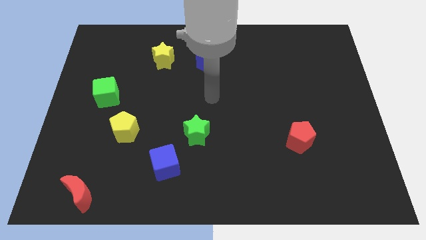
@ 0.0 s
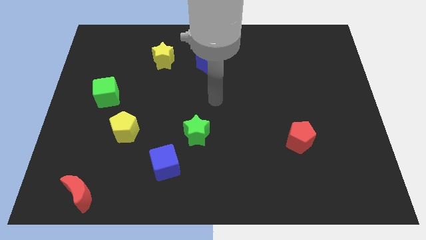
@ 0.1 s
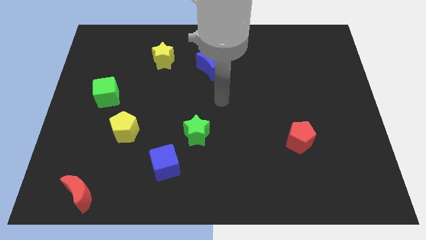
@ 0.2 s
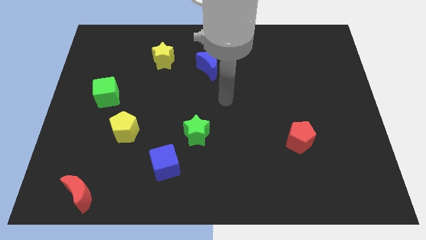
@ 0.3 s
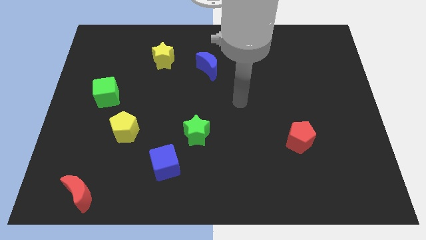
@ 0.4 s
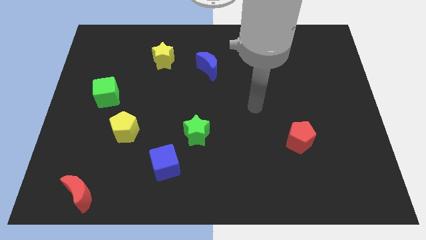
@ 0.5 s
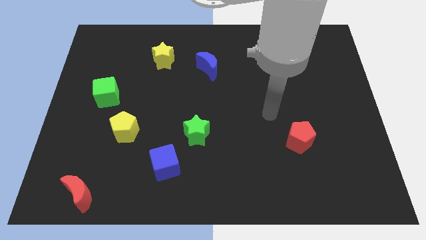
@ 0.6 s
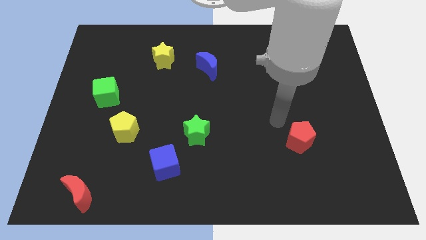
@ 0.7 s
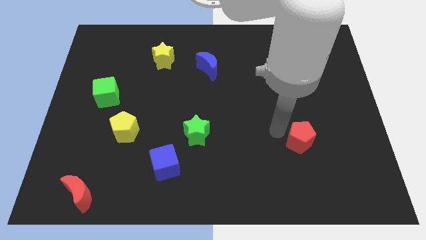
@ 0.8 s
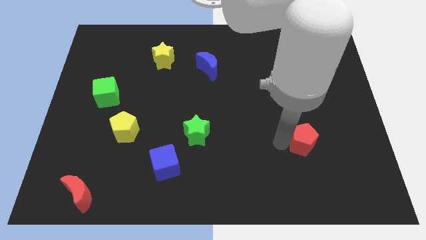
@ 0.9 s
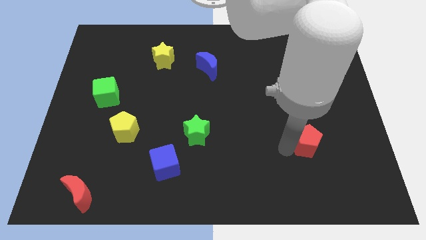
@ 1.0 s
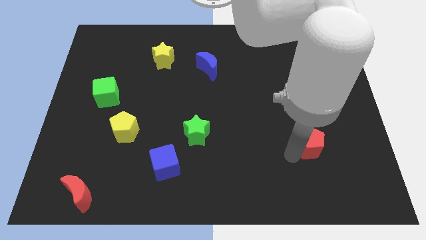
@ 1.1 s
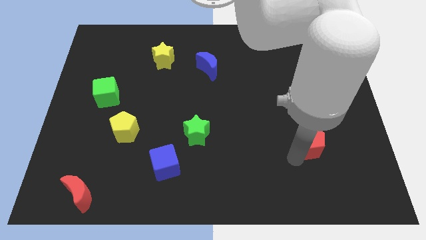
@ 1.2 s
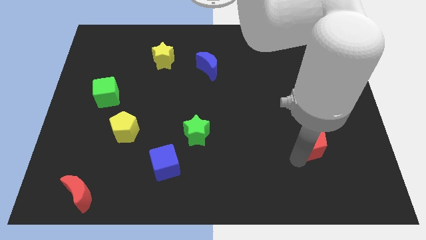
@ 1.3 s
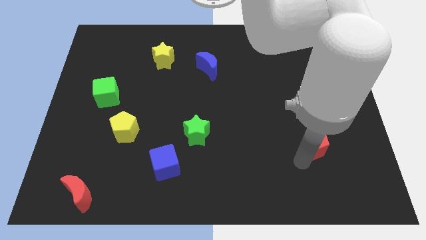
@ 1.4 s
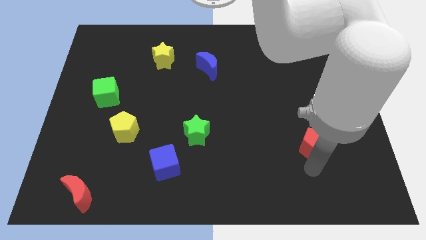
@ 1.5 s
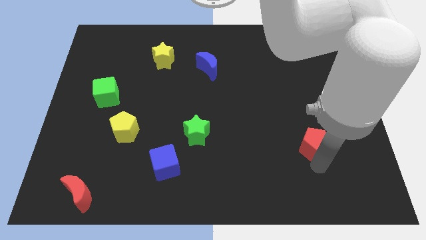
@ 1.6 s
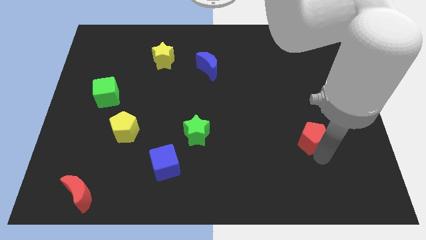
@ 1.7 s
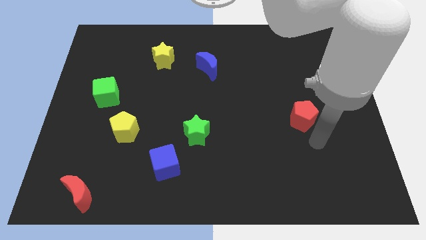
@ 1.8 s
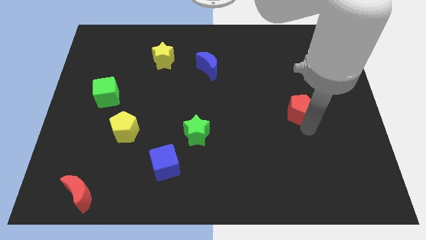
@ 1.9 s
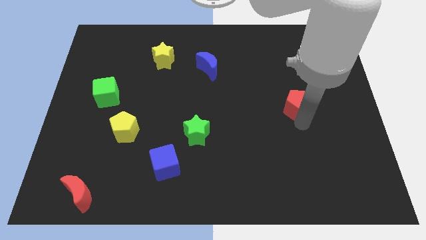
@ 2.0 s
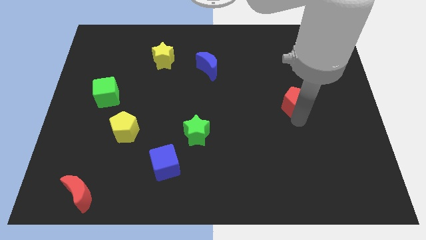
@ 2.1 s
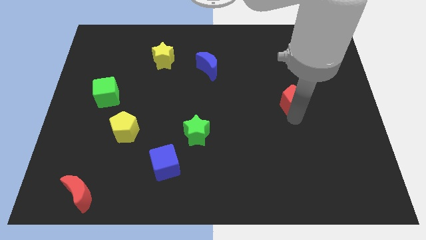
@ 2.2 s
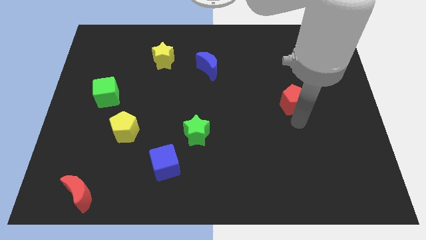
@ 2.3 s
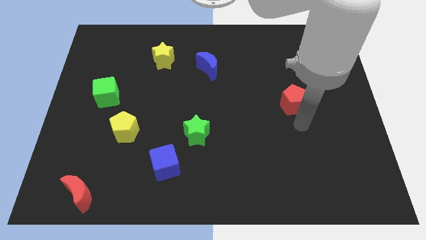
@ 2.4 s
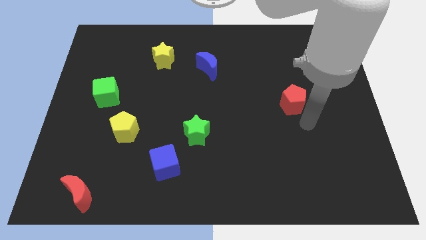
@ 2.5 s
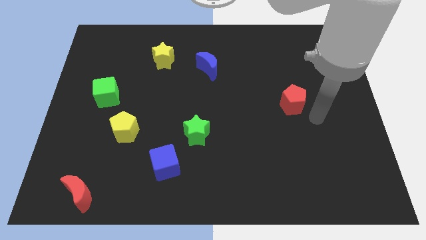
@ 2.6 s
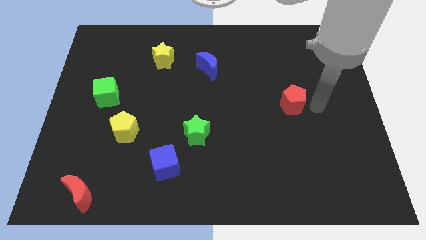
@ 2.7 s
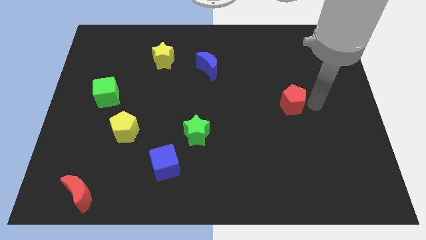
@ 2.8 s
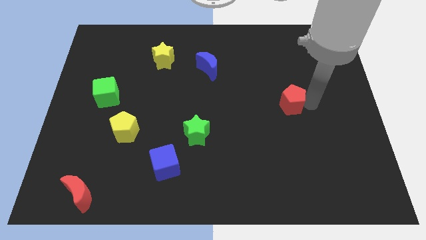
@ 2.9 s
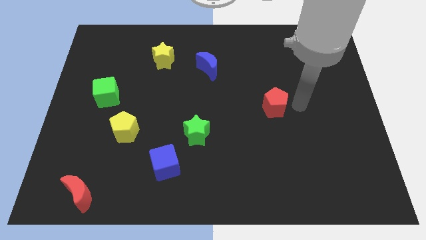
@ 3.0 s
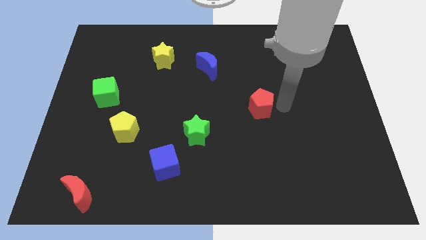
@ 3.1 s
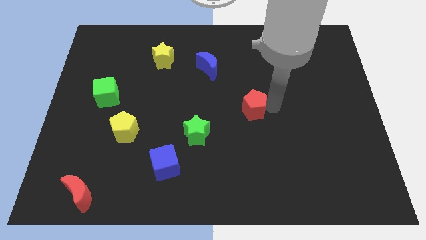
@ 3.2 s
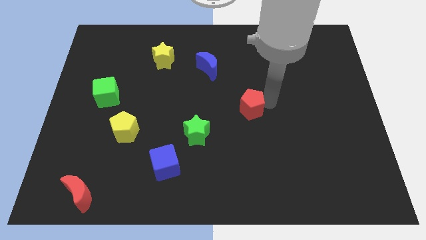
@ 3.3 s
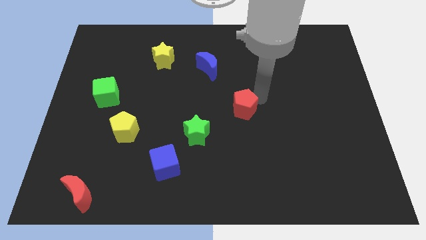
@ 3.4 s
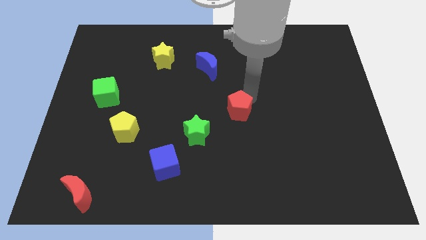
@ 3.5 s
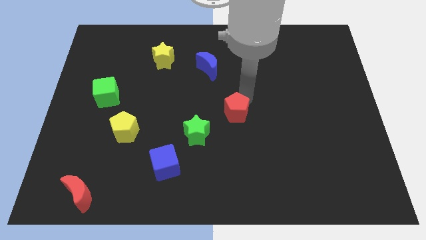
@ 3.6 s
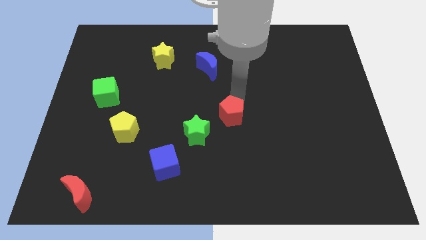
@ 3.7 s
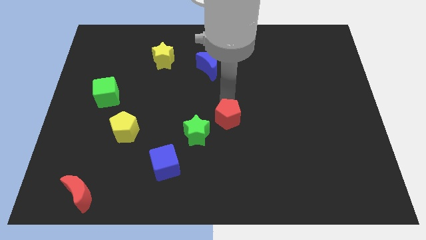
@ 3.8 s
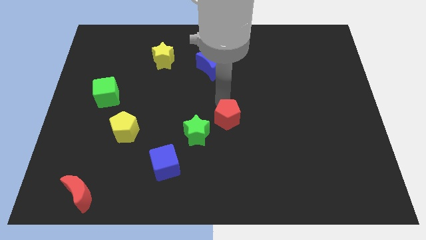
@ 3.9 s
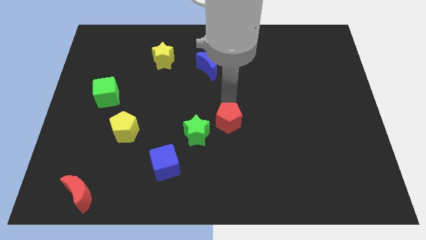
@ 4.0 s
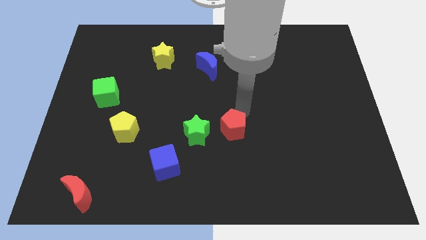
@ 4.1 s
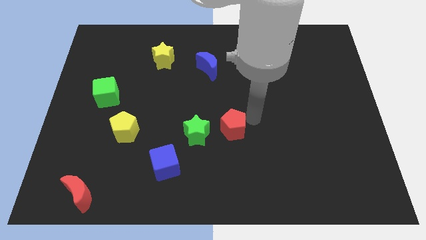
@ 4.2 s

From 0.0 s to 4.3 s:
drag the red pentagon near to the right side of the green star

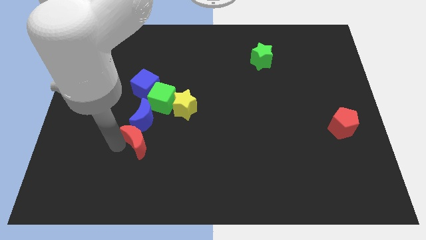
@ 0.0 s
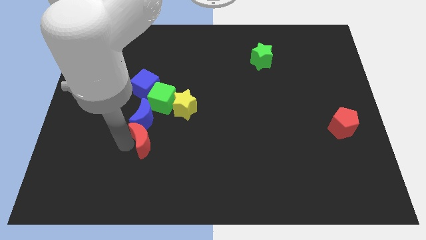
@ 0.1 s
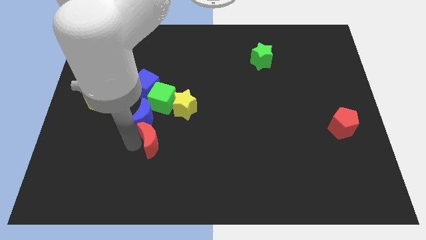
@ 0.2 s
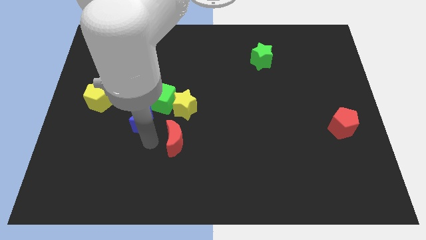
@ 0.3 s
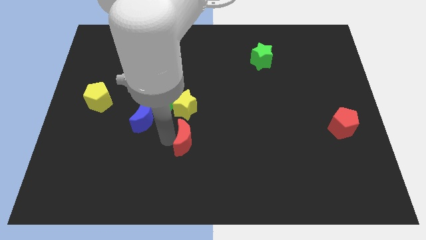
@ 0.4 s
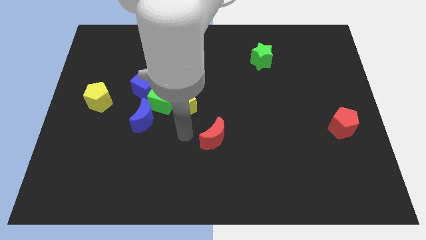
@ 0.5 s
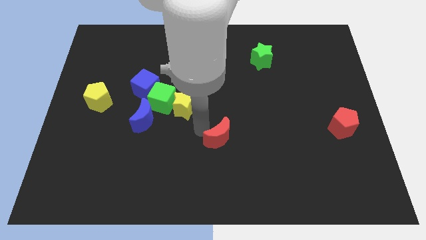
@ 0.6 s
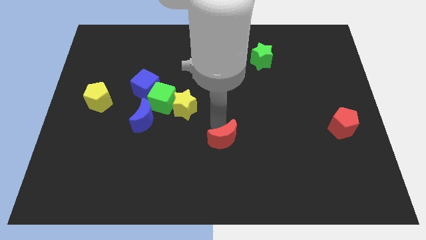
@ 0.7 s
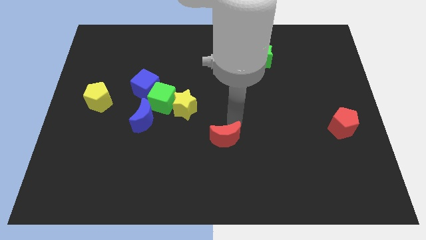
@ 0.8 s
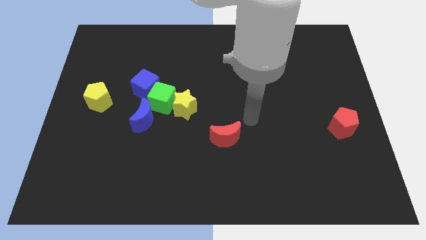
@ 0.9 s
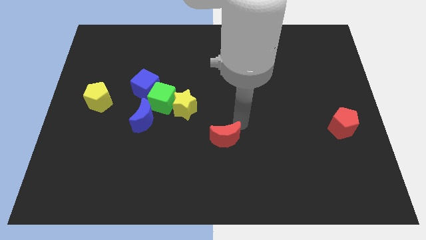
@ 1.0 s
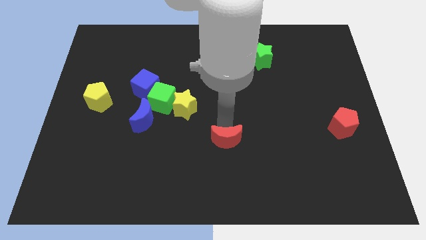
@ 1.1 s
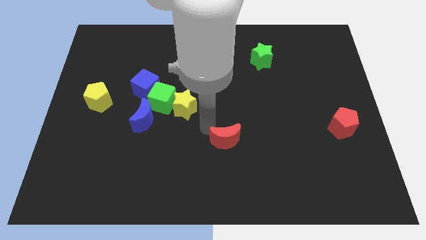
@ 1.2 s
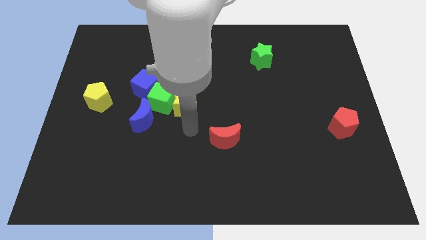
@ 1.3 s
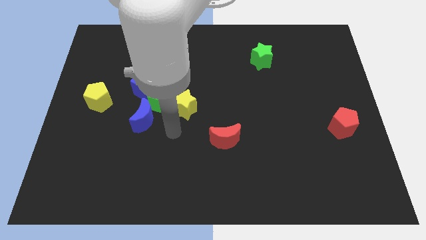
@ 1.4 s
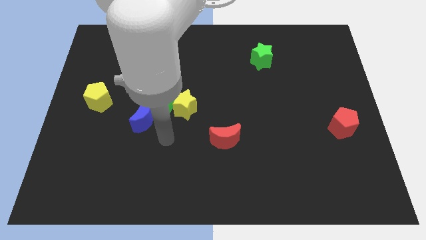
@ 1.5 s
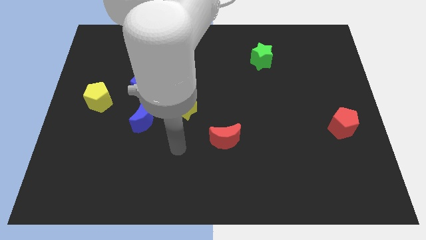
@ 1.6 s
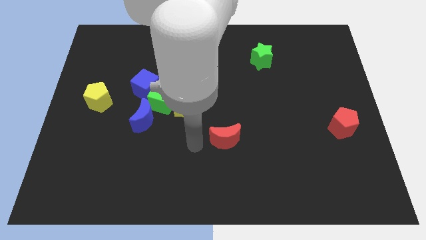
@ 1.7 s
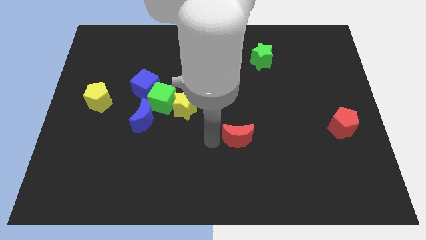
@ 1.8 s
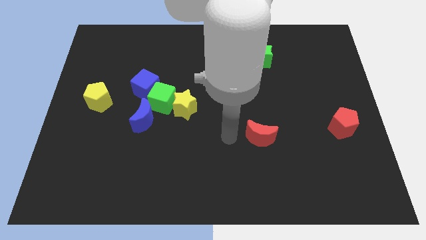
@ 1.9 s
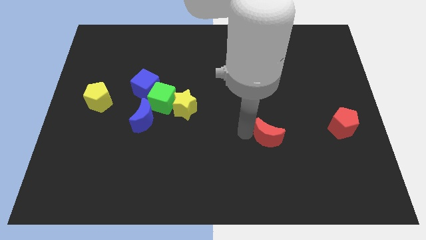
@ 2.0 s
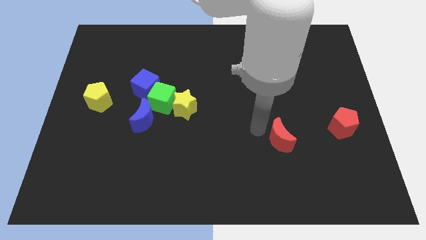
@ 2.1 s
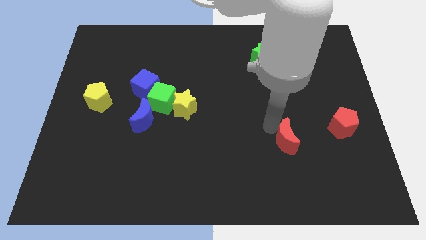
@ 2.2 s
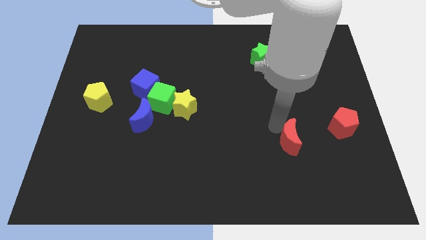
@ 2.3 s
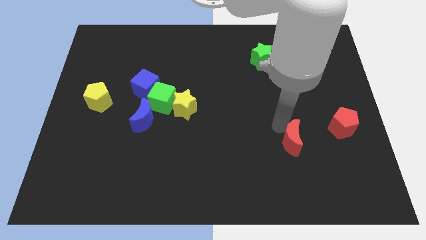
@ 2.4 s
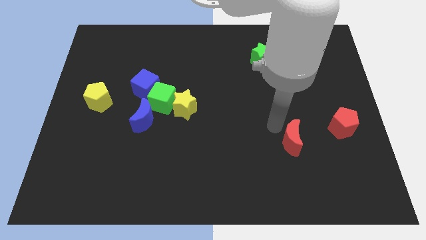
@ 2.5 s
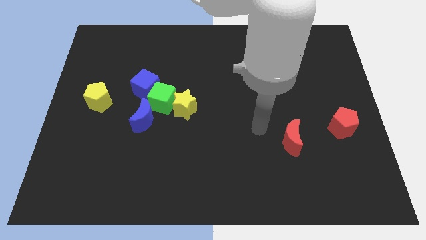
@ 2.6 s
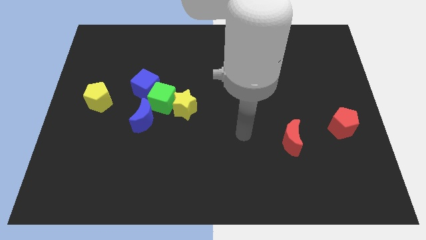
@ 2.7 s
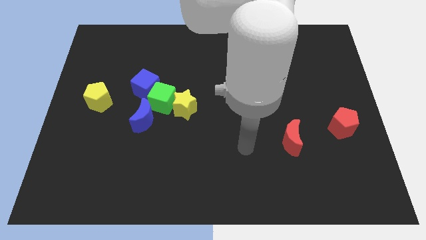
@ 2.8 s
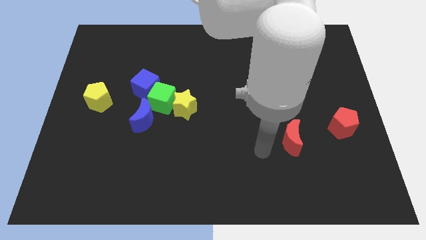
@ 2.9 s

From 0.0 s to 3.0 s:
place the red moon to the left of the red pentagon

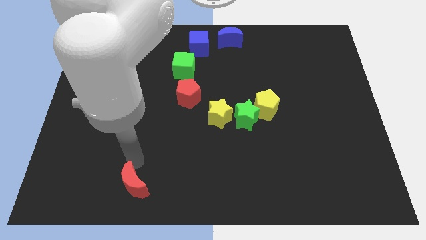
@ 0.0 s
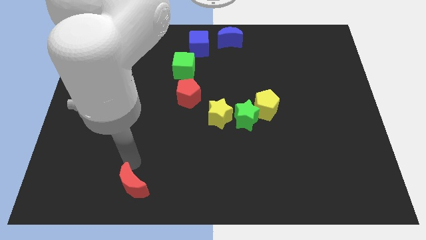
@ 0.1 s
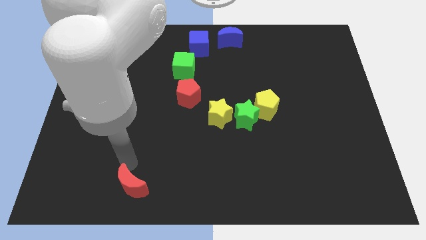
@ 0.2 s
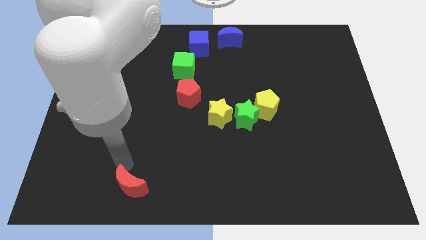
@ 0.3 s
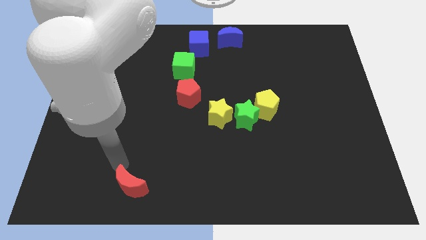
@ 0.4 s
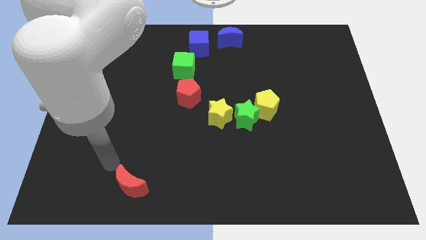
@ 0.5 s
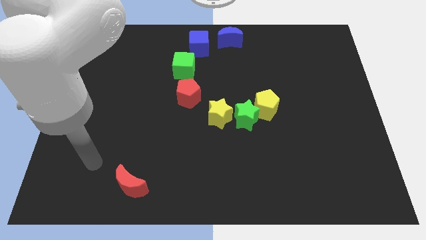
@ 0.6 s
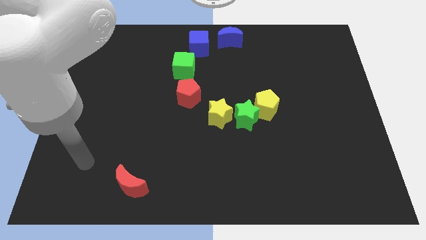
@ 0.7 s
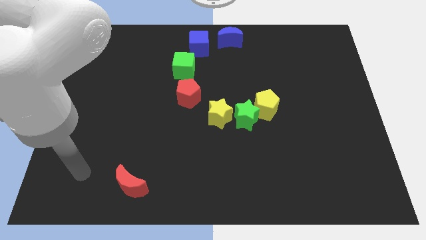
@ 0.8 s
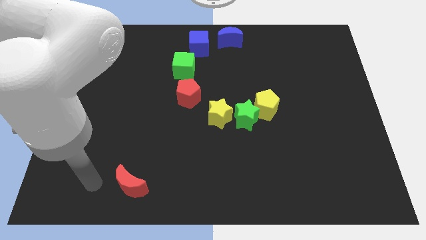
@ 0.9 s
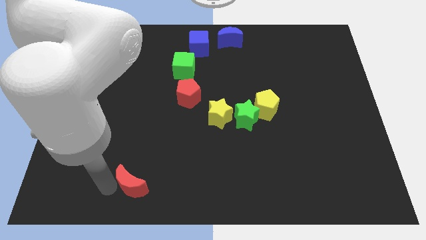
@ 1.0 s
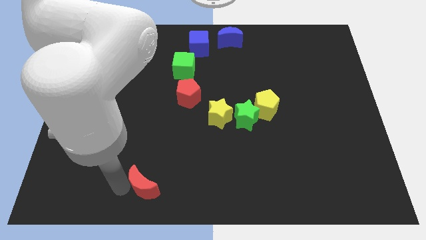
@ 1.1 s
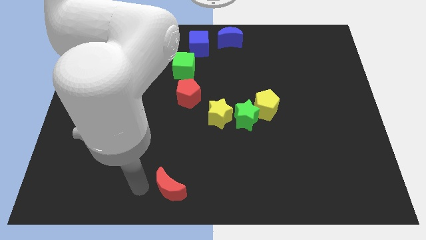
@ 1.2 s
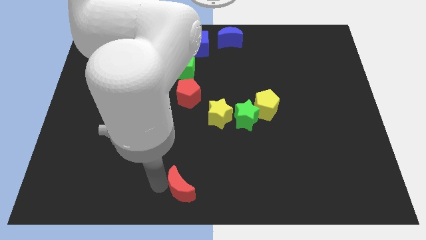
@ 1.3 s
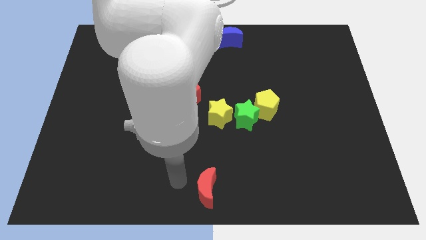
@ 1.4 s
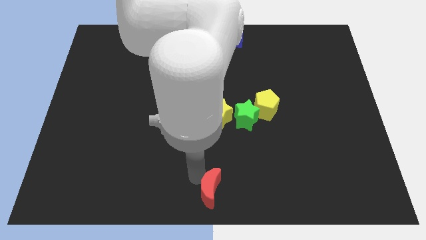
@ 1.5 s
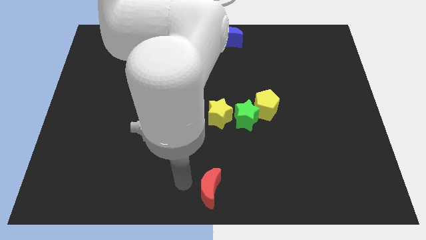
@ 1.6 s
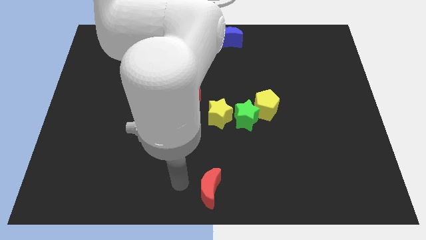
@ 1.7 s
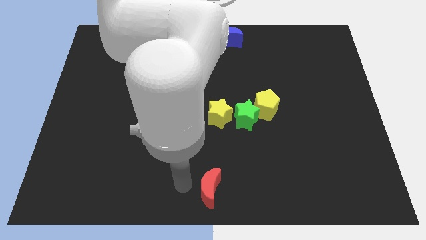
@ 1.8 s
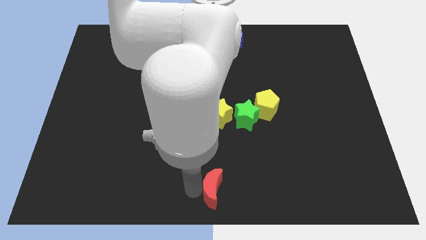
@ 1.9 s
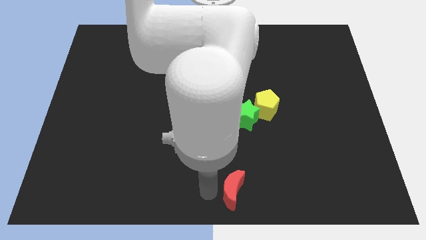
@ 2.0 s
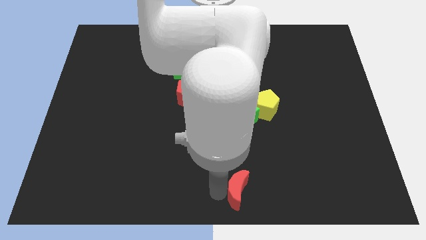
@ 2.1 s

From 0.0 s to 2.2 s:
place the red moon vertically below the green star
